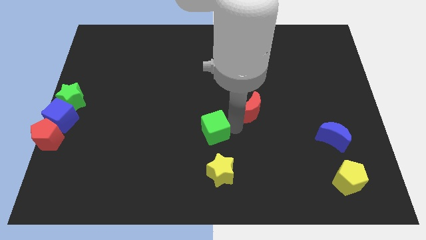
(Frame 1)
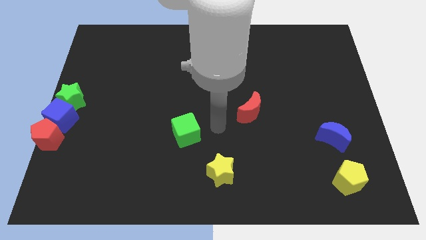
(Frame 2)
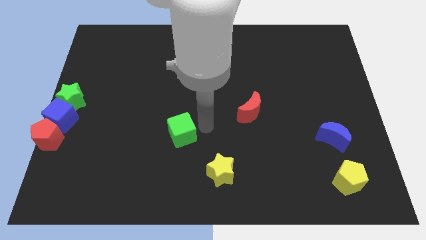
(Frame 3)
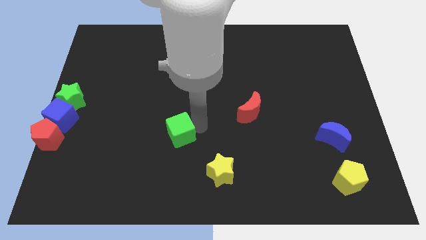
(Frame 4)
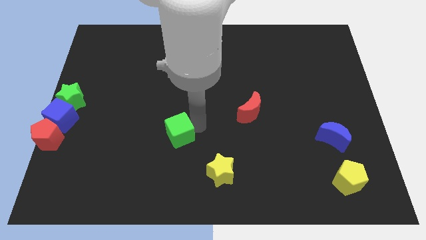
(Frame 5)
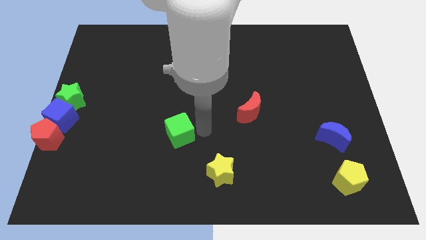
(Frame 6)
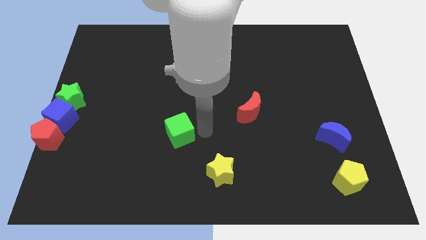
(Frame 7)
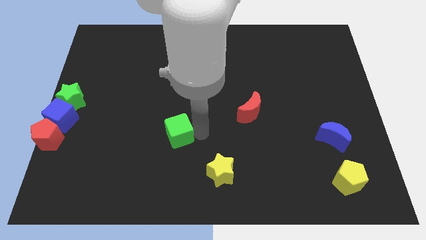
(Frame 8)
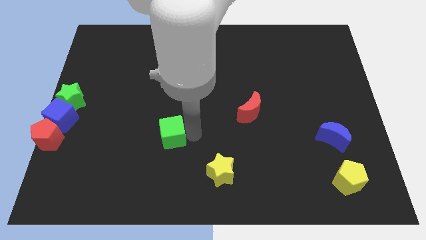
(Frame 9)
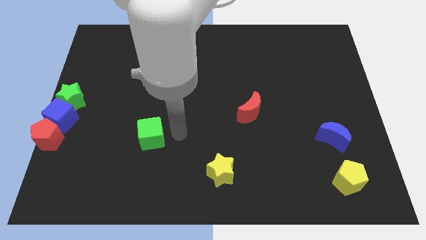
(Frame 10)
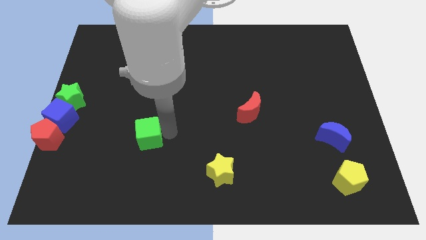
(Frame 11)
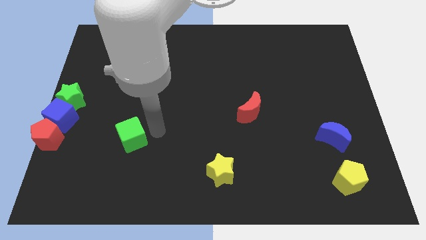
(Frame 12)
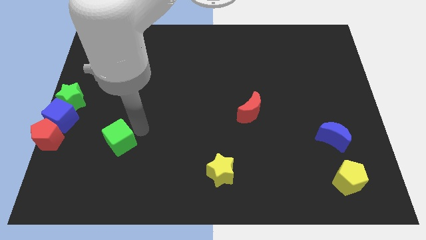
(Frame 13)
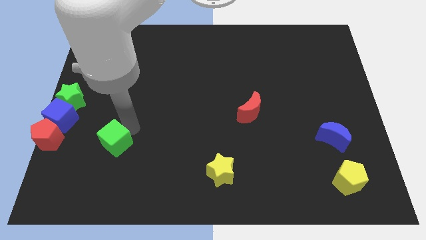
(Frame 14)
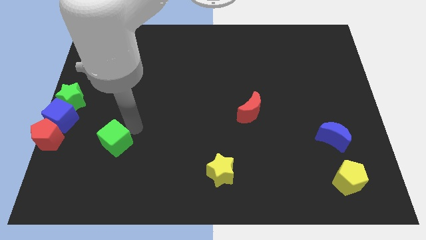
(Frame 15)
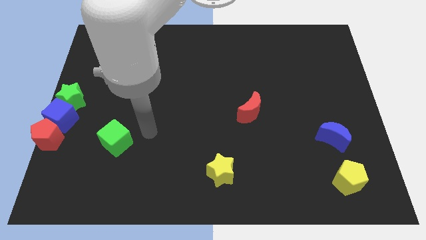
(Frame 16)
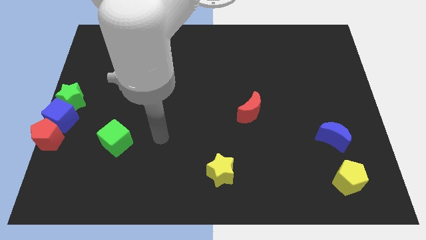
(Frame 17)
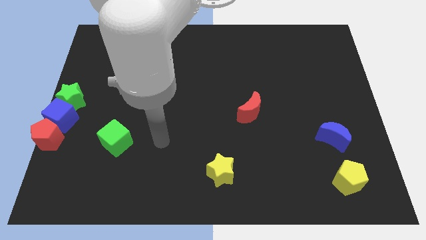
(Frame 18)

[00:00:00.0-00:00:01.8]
push the green cube towards right to the red pentagon

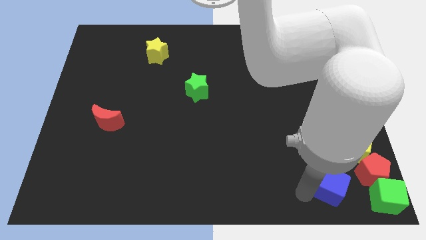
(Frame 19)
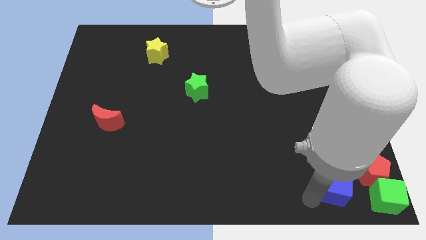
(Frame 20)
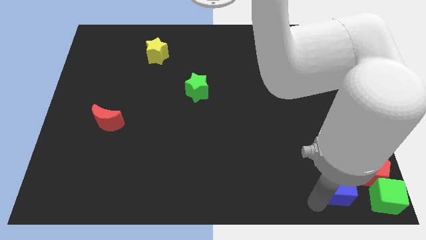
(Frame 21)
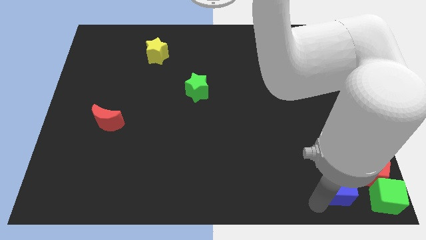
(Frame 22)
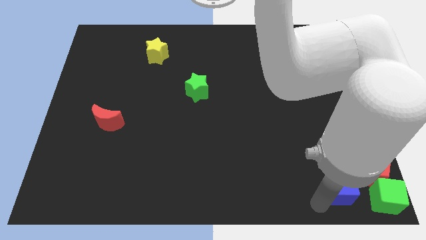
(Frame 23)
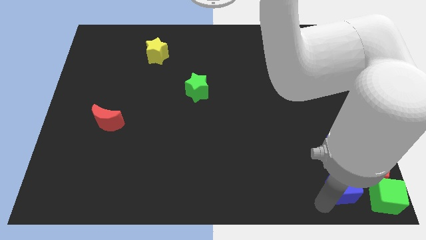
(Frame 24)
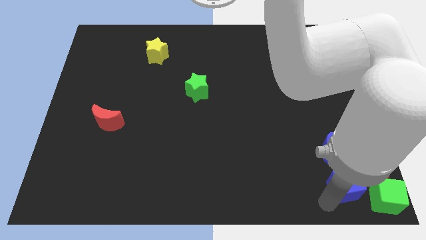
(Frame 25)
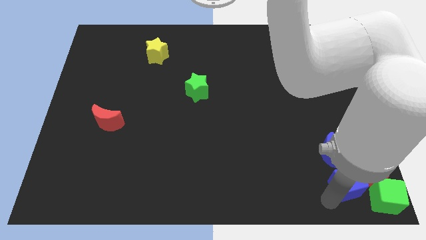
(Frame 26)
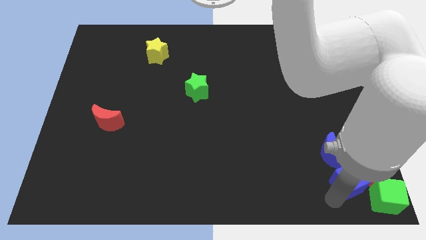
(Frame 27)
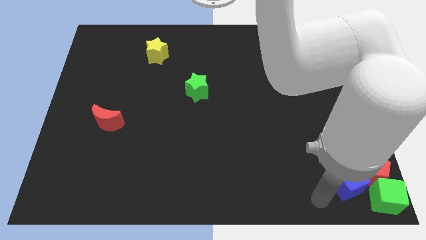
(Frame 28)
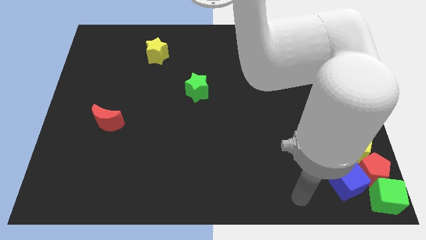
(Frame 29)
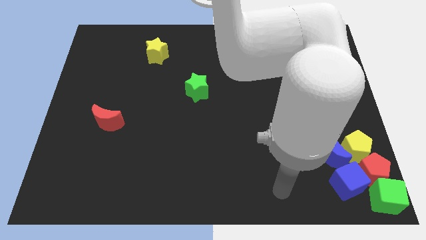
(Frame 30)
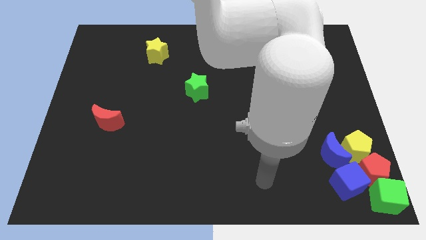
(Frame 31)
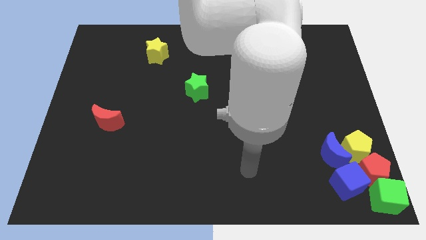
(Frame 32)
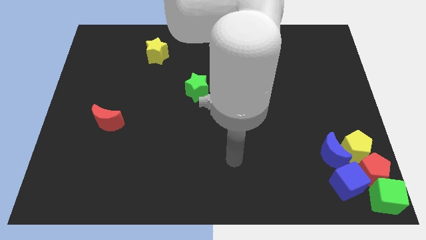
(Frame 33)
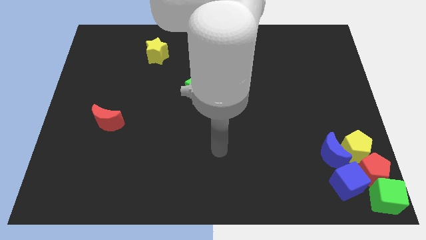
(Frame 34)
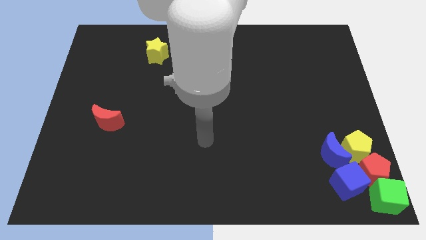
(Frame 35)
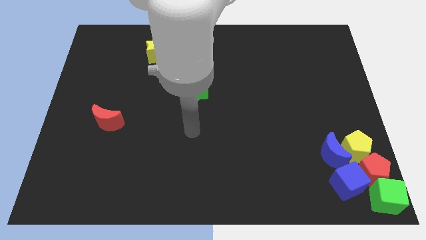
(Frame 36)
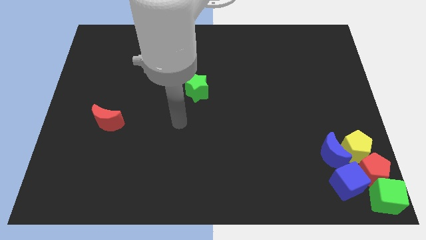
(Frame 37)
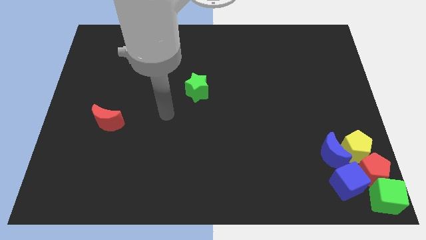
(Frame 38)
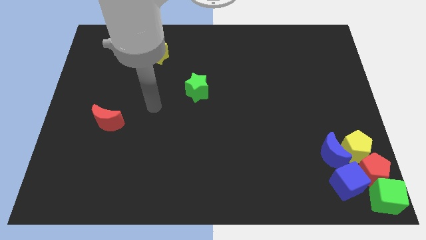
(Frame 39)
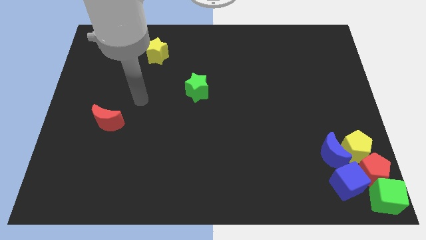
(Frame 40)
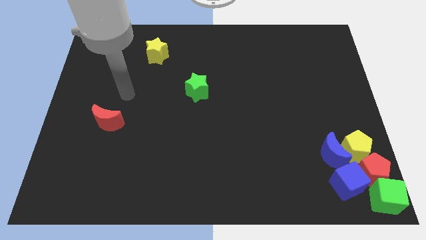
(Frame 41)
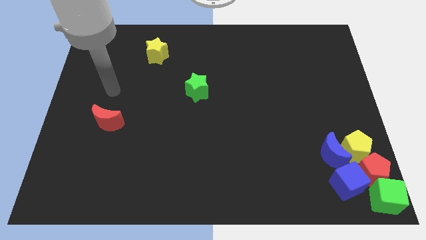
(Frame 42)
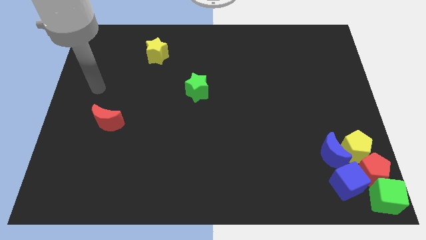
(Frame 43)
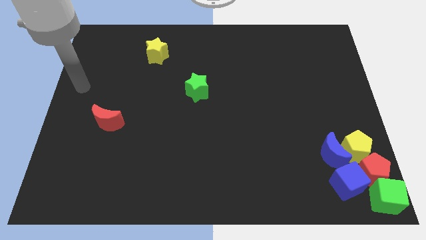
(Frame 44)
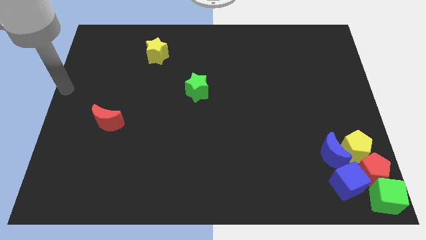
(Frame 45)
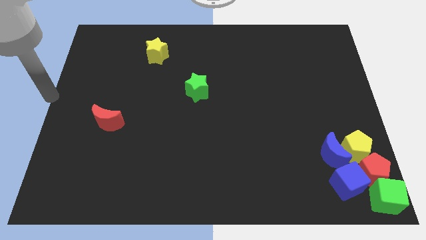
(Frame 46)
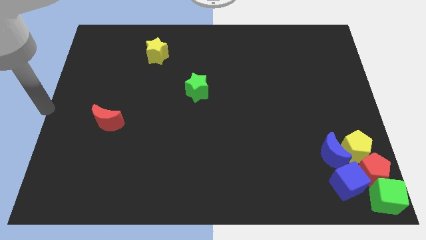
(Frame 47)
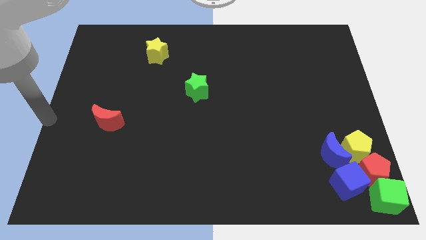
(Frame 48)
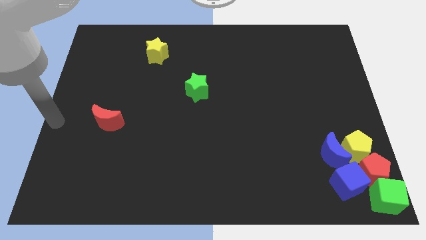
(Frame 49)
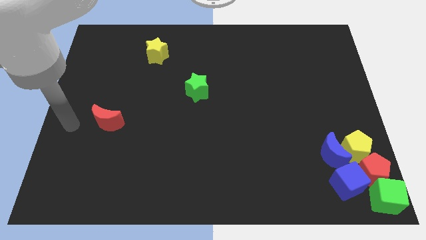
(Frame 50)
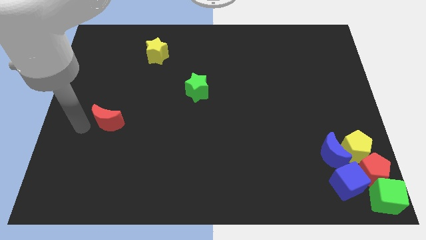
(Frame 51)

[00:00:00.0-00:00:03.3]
push your hand away from the blue cube

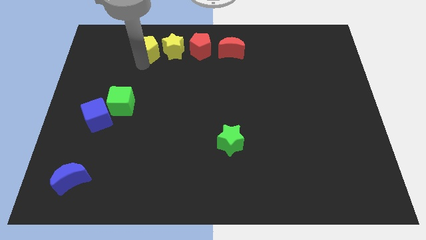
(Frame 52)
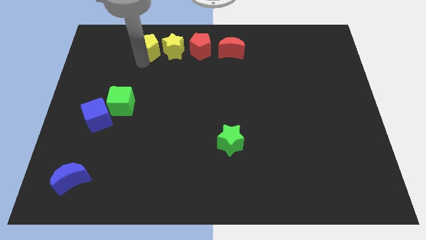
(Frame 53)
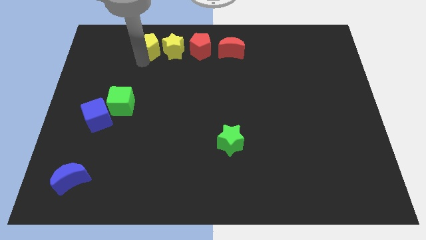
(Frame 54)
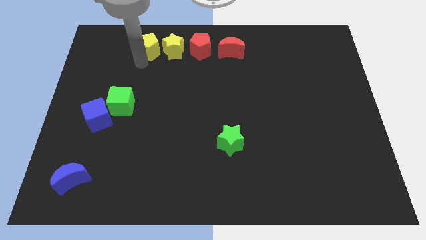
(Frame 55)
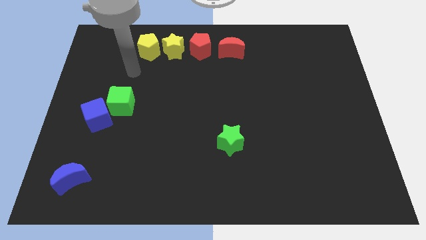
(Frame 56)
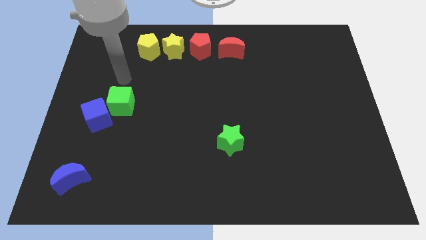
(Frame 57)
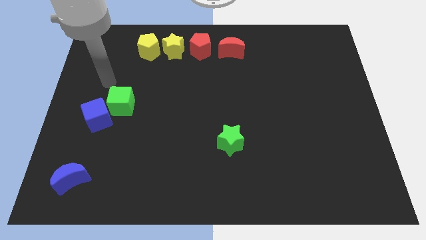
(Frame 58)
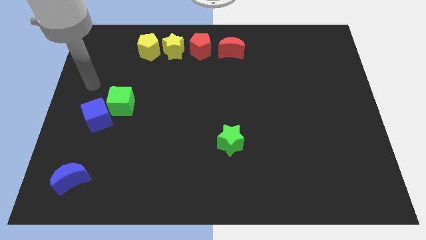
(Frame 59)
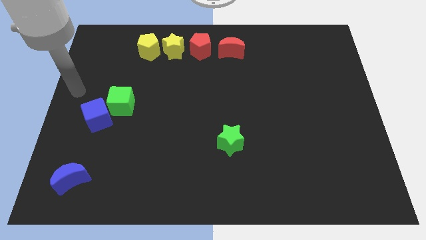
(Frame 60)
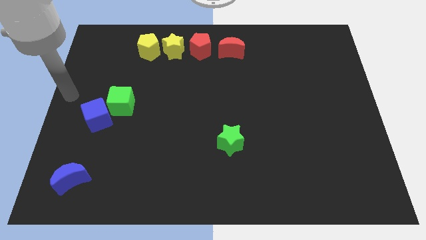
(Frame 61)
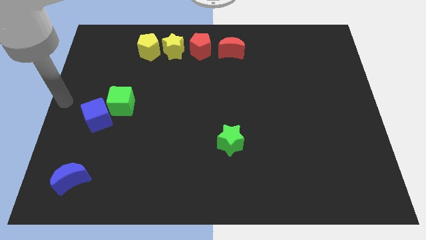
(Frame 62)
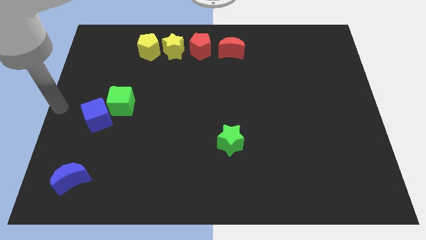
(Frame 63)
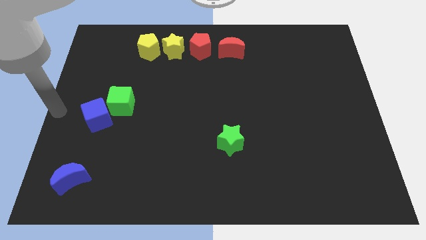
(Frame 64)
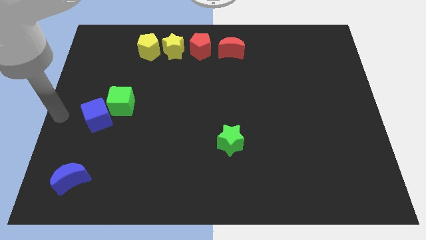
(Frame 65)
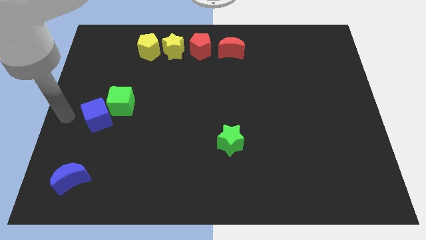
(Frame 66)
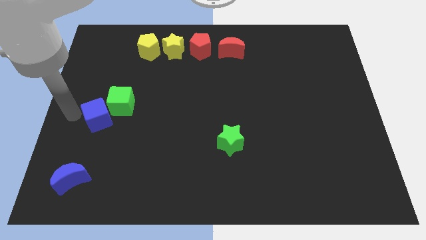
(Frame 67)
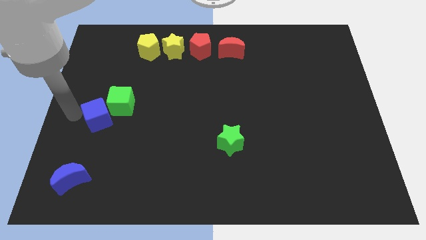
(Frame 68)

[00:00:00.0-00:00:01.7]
place the arm left to the blue cube

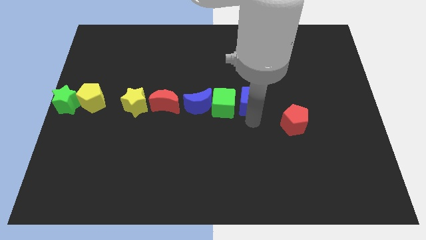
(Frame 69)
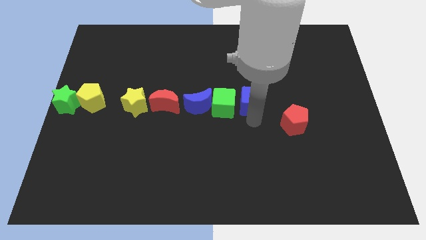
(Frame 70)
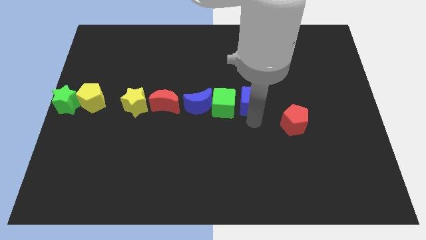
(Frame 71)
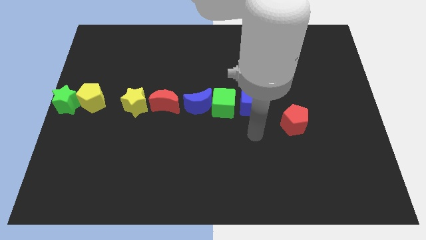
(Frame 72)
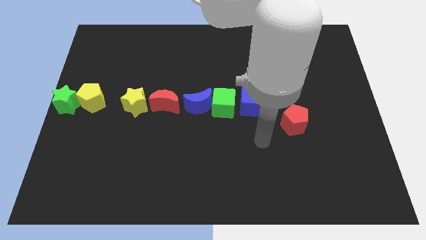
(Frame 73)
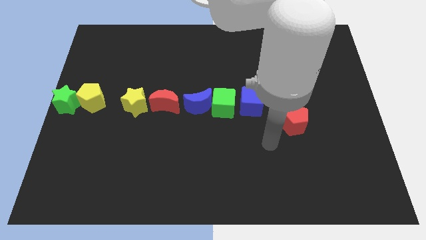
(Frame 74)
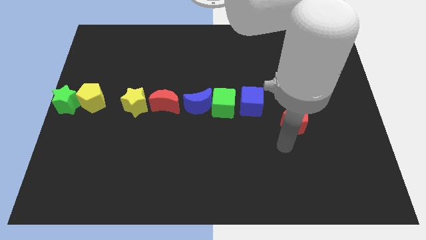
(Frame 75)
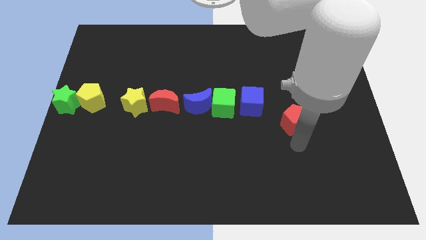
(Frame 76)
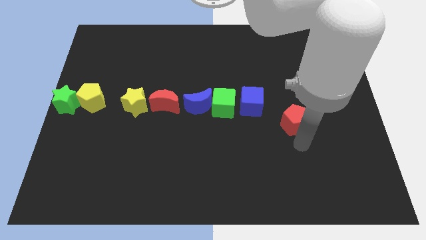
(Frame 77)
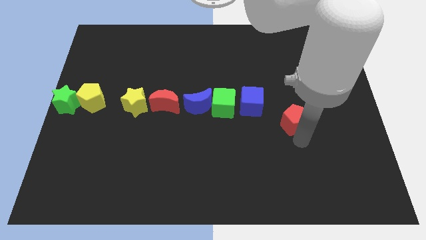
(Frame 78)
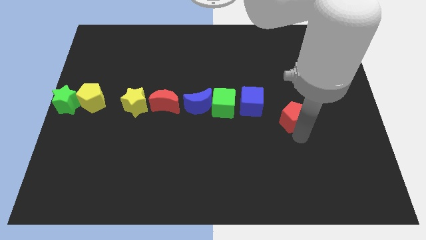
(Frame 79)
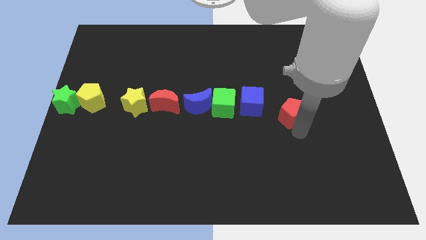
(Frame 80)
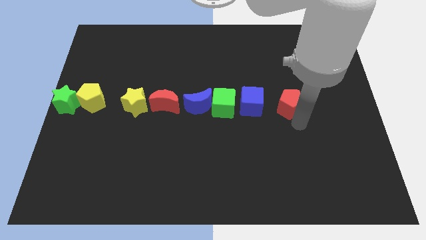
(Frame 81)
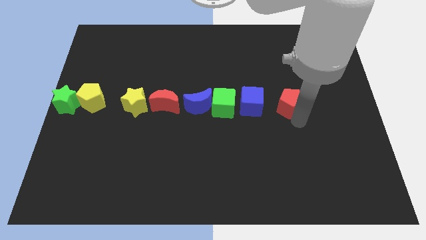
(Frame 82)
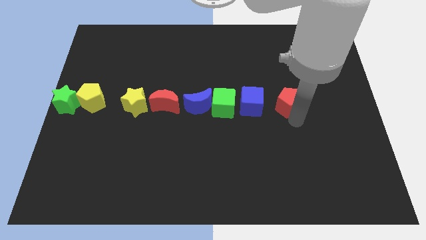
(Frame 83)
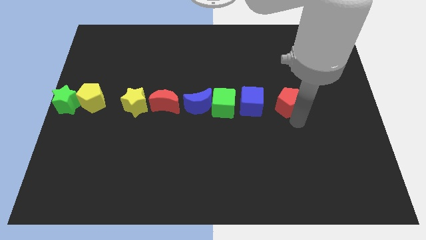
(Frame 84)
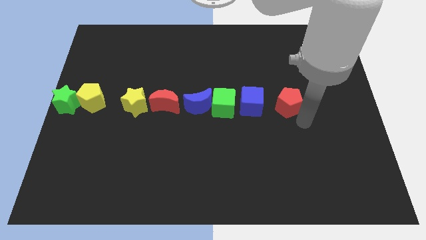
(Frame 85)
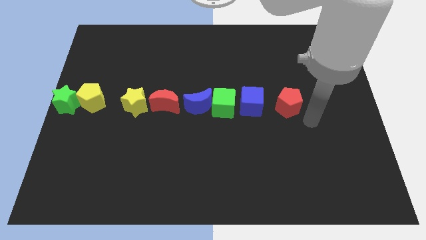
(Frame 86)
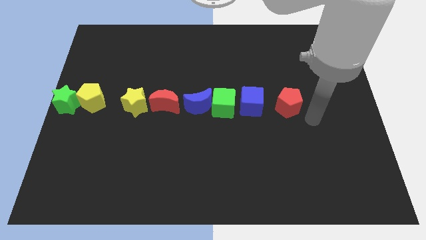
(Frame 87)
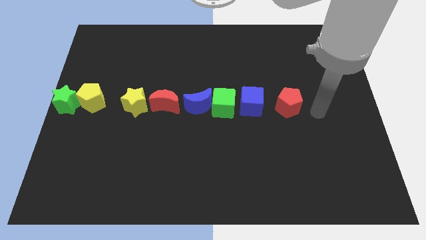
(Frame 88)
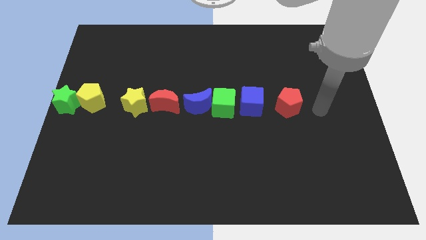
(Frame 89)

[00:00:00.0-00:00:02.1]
move red pentagon to the right of blue cube

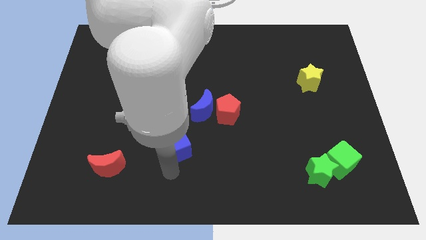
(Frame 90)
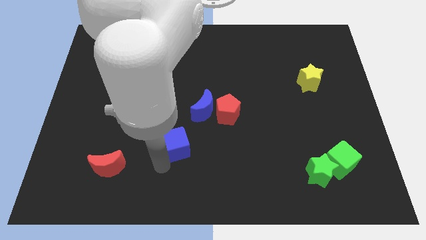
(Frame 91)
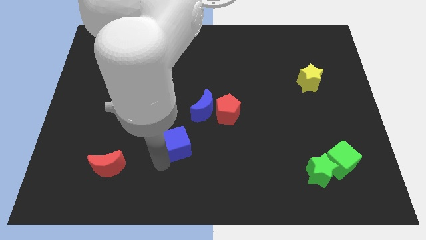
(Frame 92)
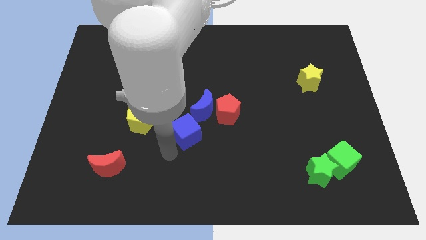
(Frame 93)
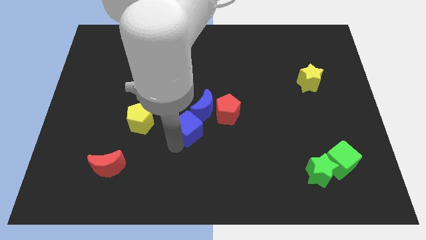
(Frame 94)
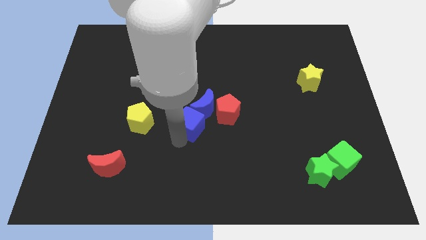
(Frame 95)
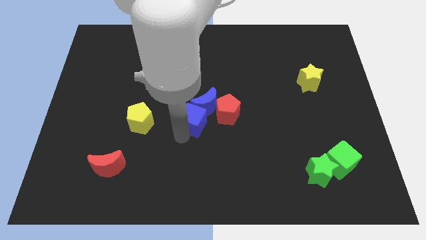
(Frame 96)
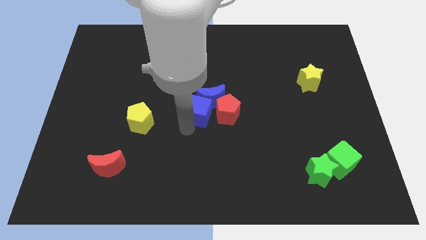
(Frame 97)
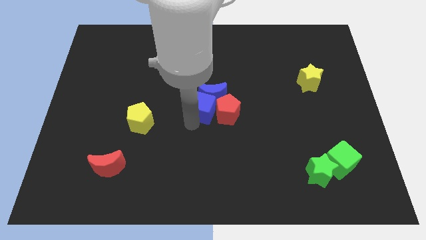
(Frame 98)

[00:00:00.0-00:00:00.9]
move blue blocks at center
